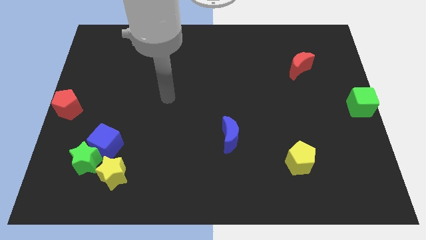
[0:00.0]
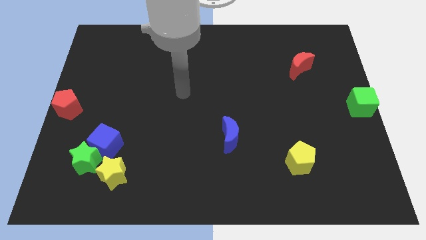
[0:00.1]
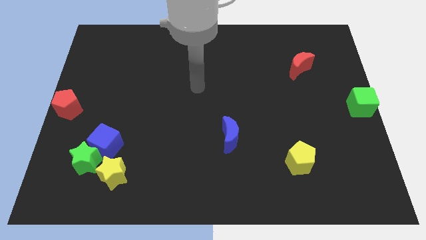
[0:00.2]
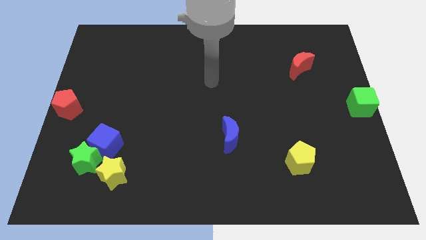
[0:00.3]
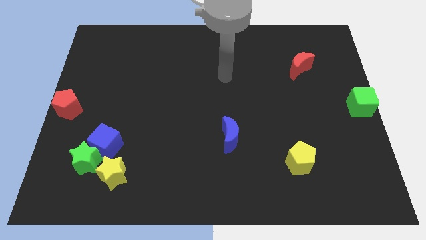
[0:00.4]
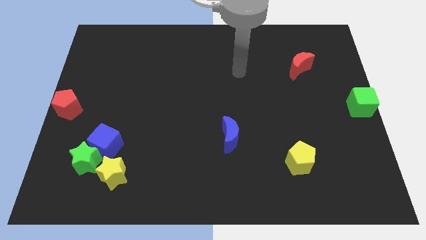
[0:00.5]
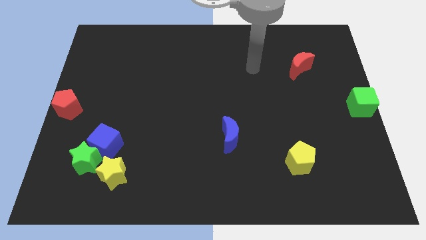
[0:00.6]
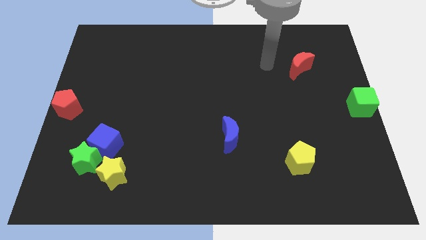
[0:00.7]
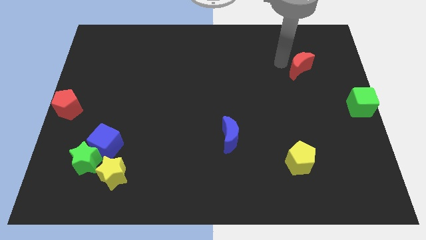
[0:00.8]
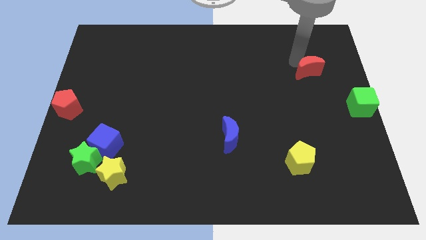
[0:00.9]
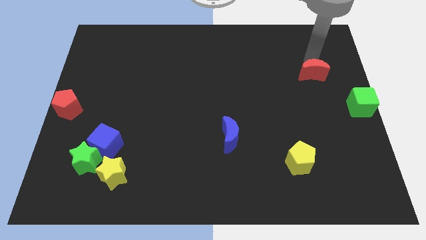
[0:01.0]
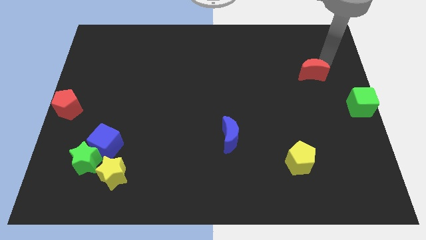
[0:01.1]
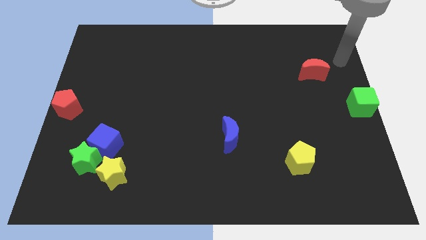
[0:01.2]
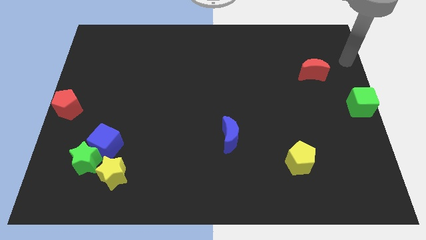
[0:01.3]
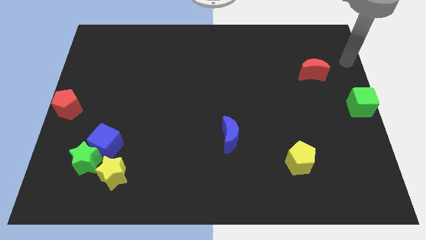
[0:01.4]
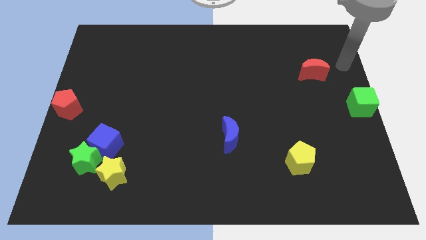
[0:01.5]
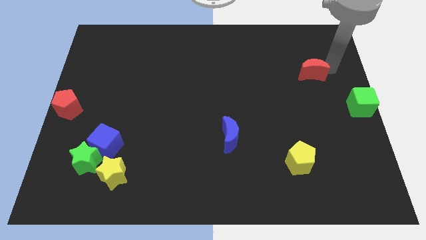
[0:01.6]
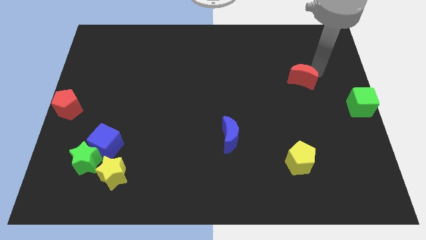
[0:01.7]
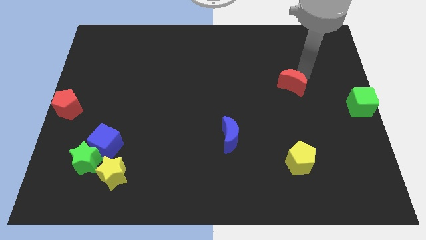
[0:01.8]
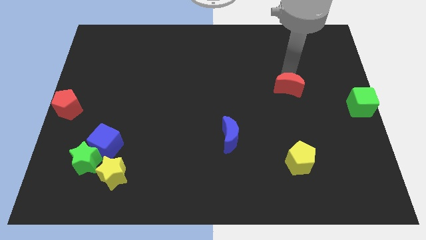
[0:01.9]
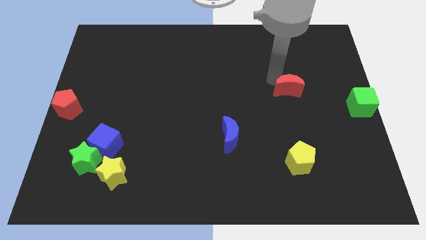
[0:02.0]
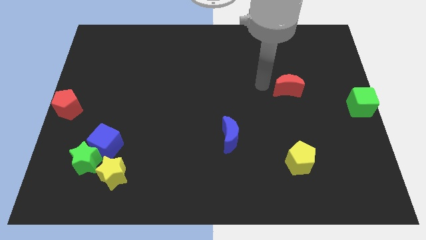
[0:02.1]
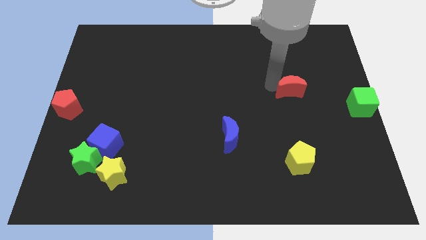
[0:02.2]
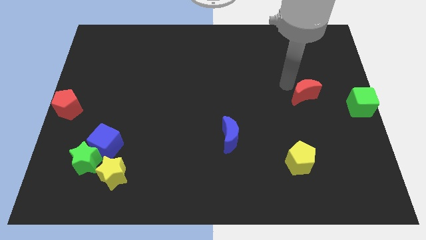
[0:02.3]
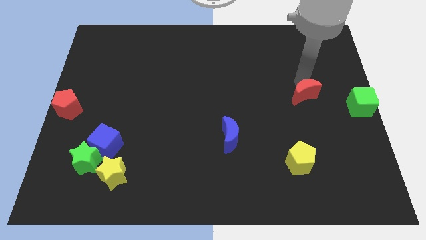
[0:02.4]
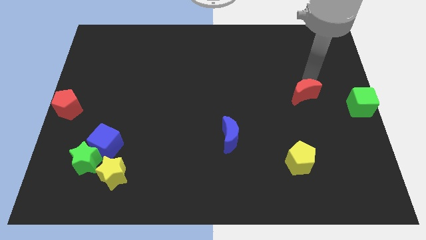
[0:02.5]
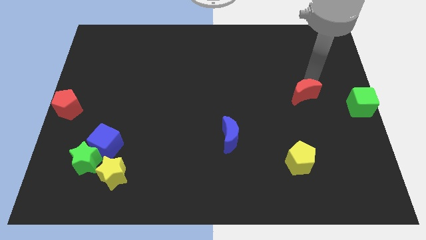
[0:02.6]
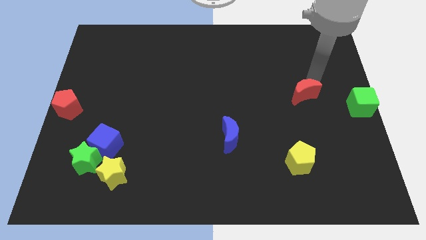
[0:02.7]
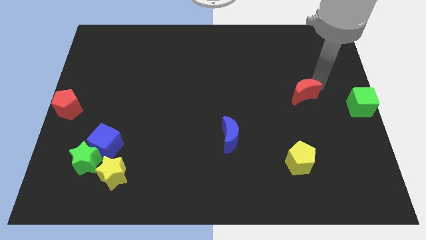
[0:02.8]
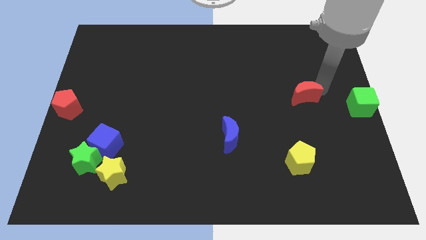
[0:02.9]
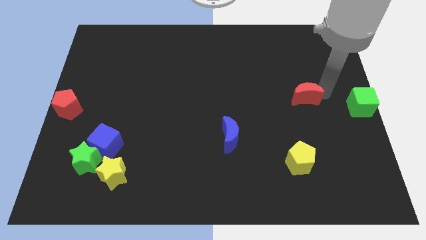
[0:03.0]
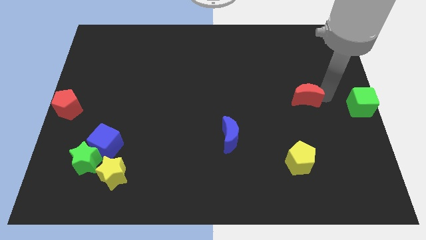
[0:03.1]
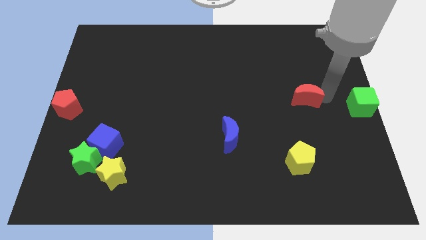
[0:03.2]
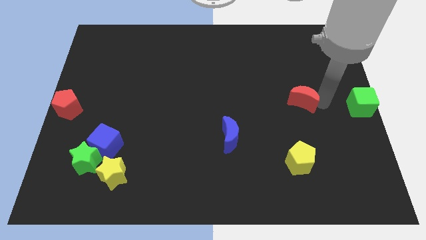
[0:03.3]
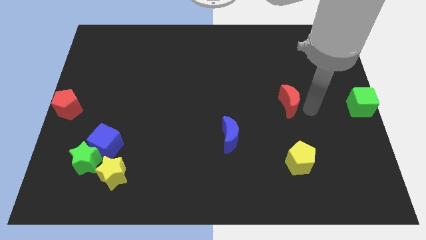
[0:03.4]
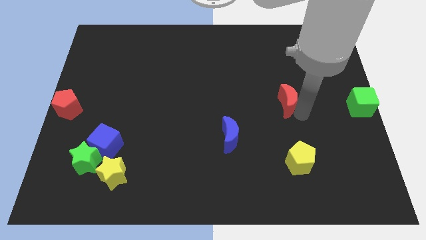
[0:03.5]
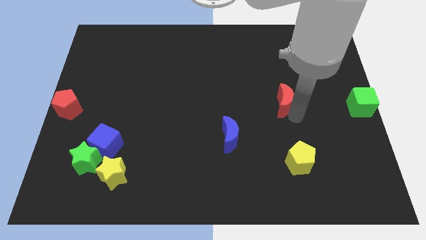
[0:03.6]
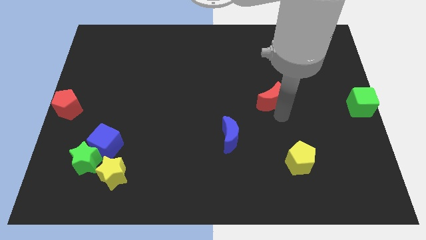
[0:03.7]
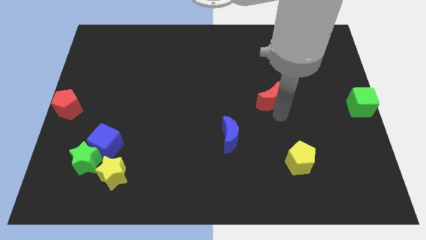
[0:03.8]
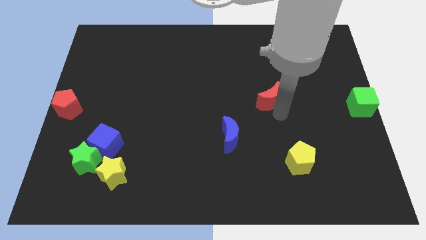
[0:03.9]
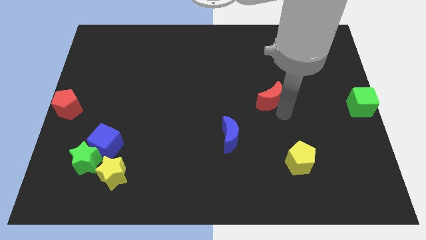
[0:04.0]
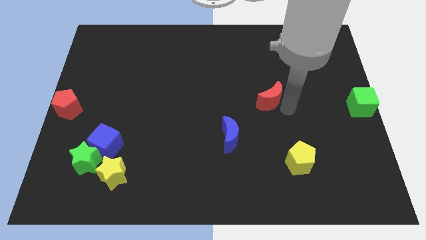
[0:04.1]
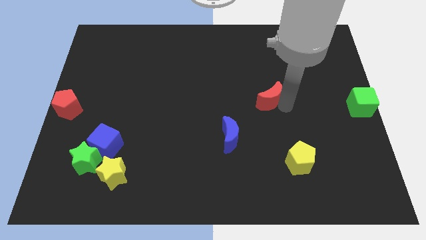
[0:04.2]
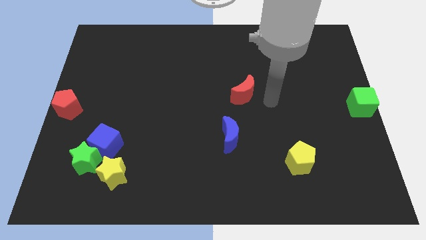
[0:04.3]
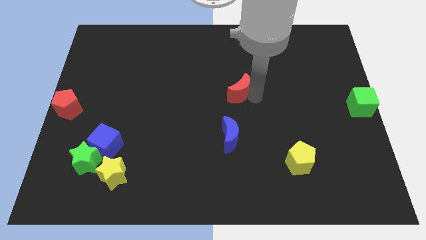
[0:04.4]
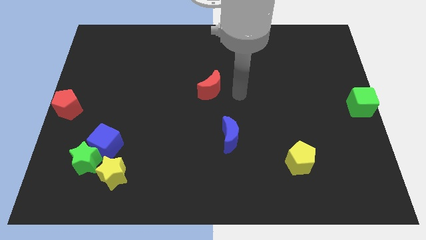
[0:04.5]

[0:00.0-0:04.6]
move the red moon to the center of the board

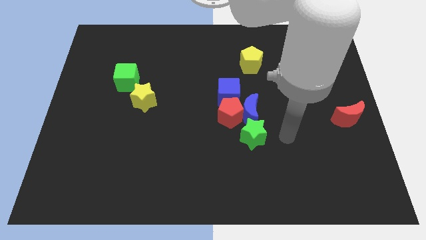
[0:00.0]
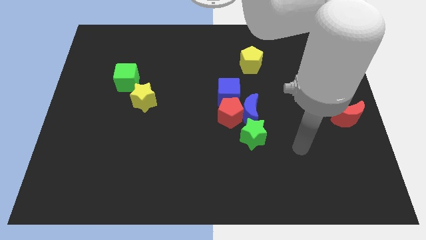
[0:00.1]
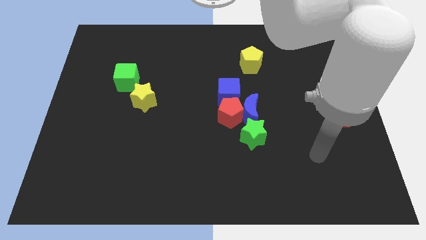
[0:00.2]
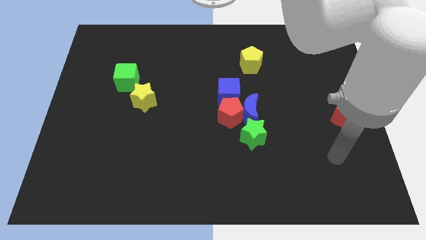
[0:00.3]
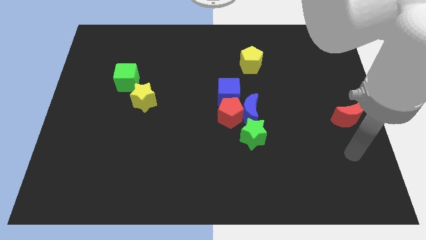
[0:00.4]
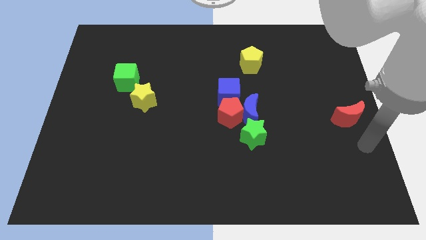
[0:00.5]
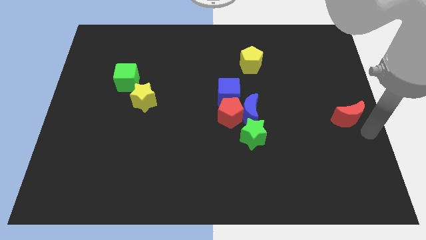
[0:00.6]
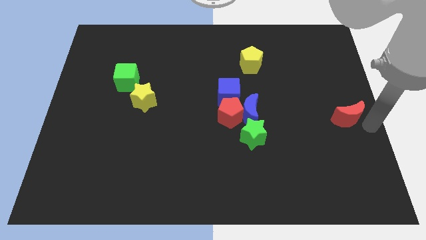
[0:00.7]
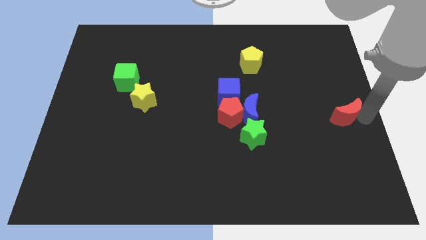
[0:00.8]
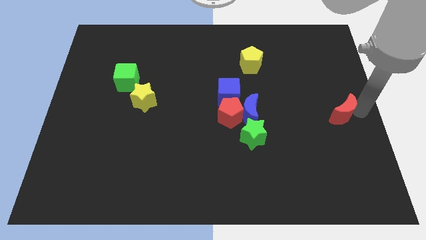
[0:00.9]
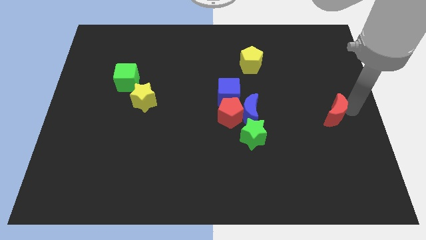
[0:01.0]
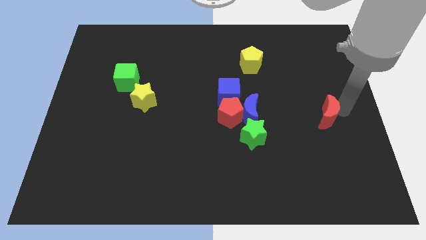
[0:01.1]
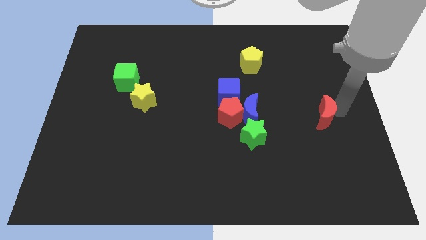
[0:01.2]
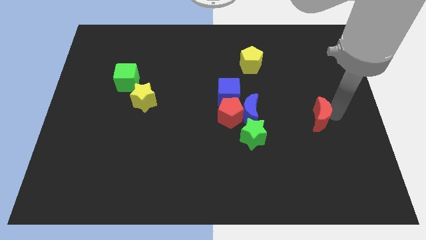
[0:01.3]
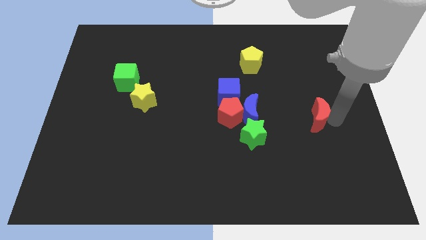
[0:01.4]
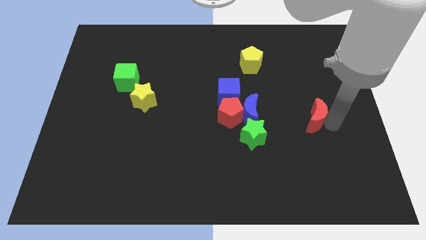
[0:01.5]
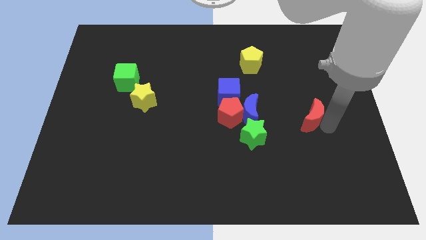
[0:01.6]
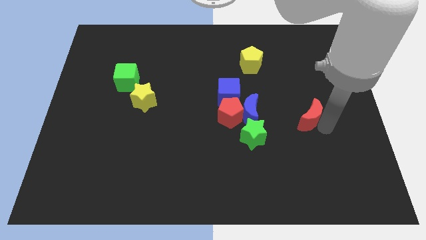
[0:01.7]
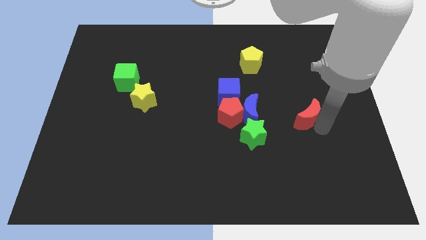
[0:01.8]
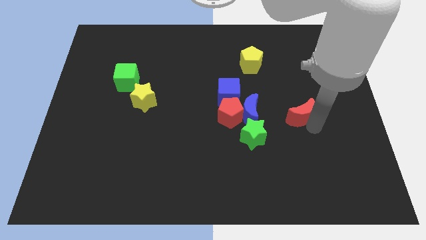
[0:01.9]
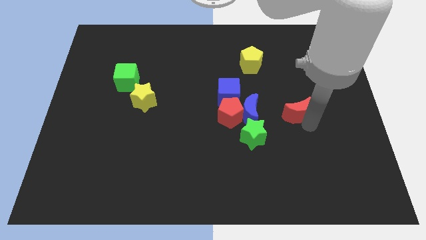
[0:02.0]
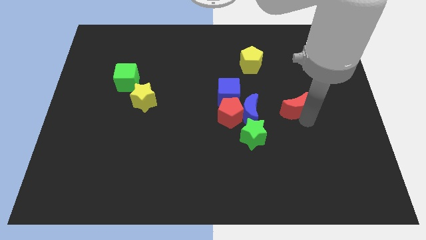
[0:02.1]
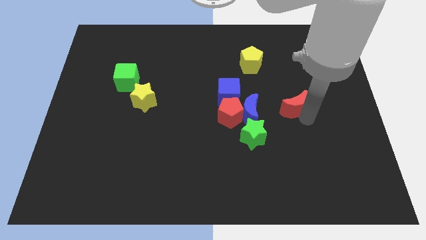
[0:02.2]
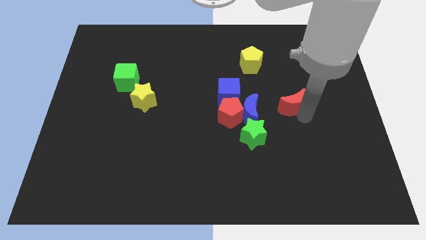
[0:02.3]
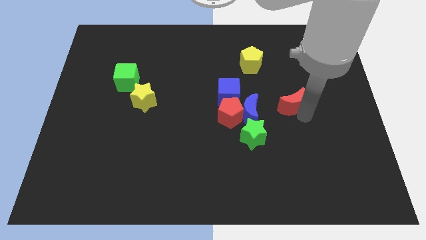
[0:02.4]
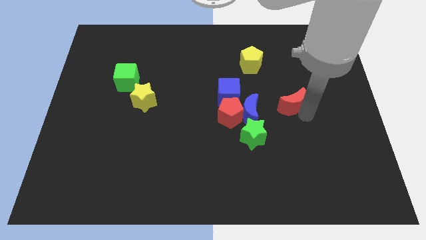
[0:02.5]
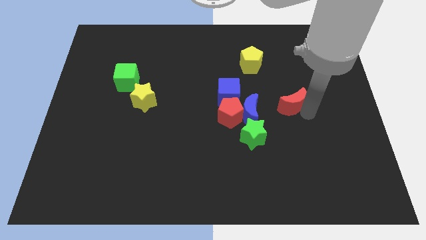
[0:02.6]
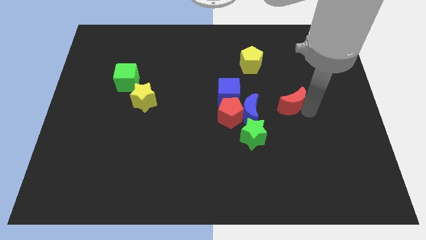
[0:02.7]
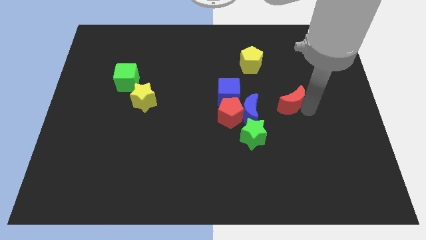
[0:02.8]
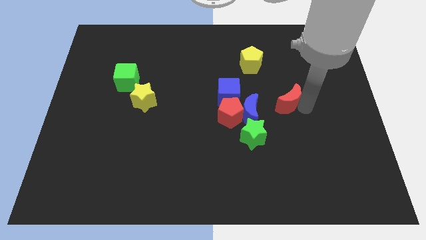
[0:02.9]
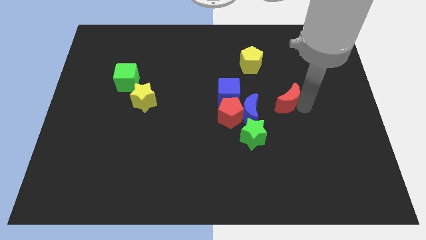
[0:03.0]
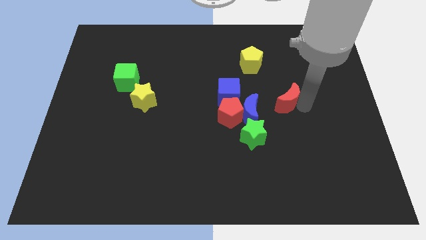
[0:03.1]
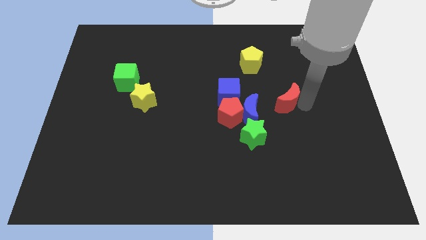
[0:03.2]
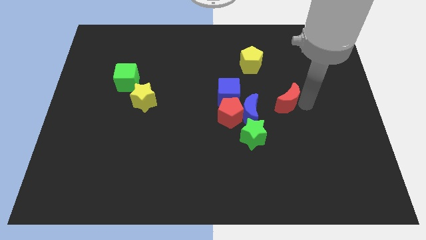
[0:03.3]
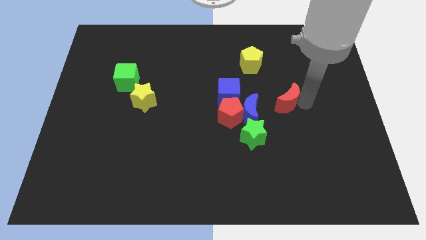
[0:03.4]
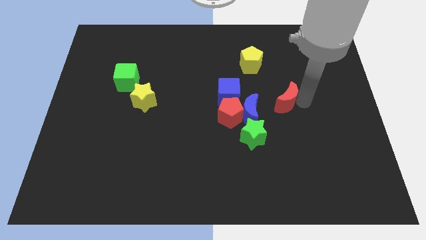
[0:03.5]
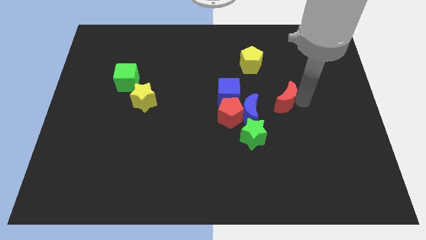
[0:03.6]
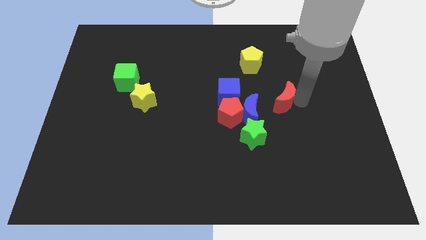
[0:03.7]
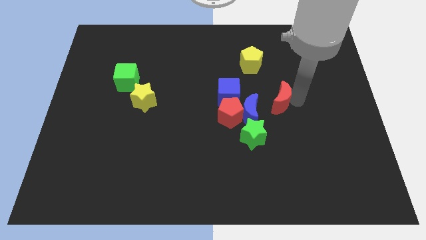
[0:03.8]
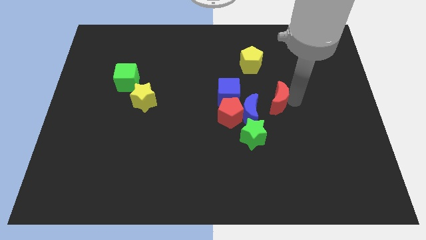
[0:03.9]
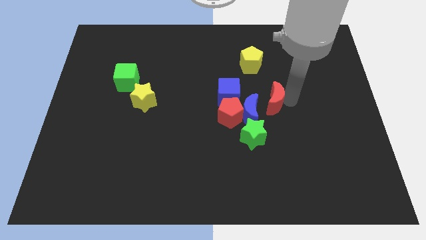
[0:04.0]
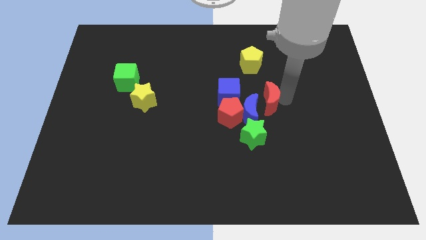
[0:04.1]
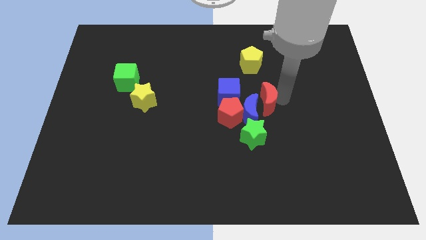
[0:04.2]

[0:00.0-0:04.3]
place the red crescent to the right side of blue crescent

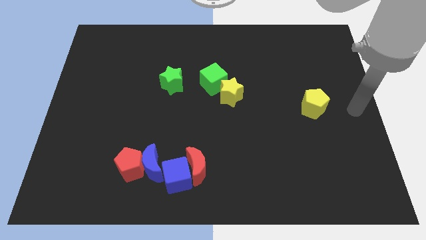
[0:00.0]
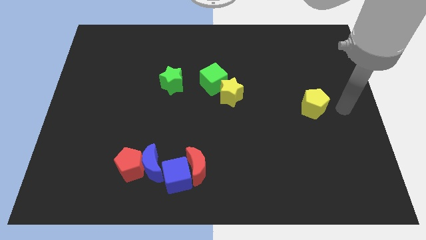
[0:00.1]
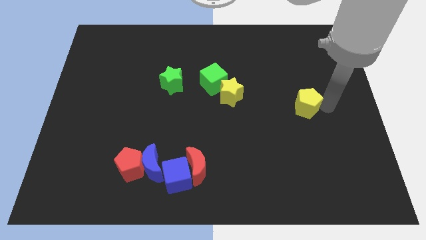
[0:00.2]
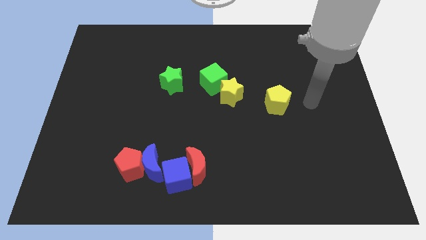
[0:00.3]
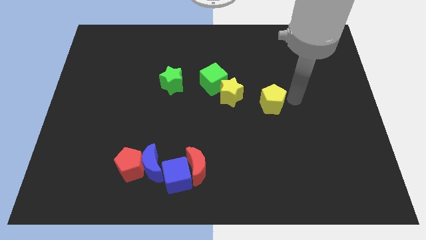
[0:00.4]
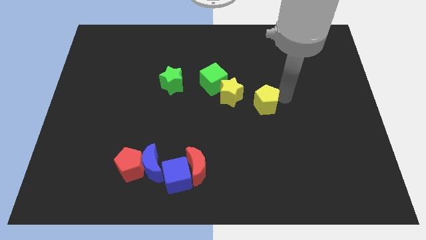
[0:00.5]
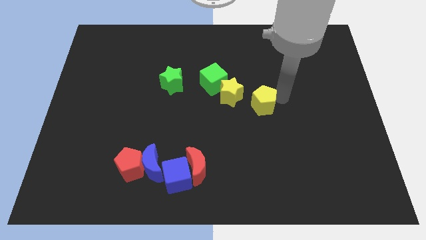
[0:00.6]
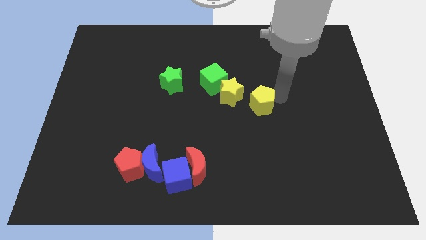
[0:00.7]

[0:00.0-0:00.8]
push yellow pentagon beside yellow star
